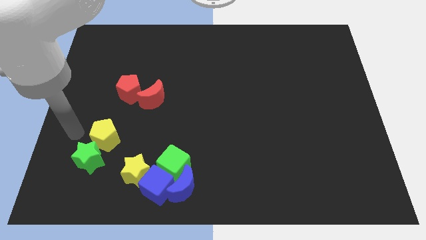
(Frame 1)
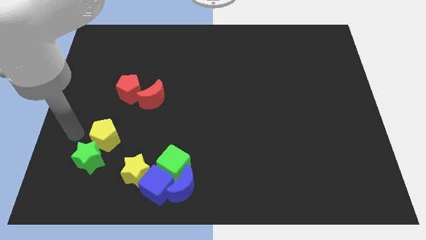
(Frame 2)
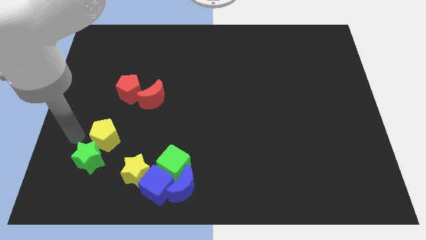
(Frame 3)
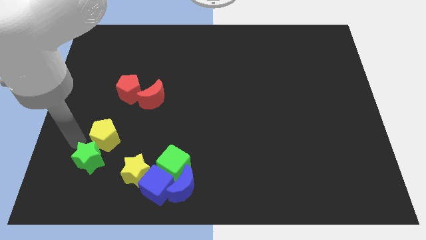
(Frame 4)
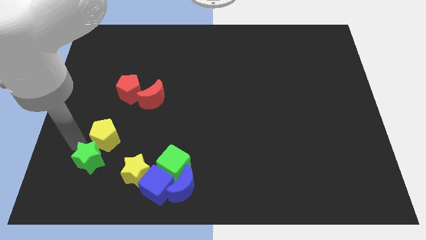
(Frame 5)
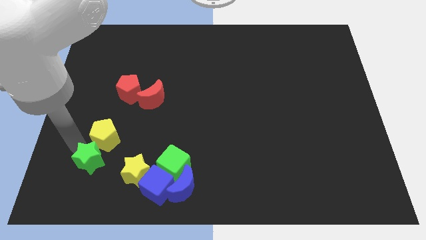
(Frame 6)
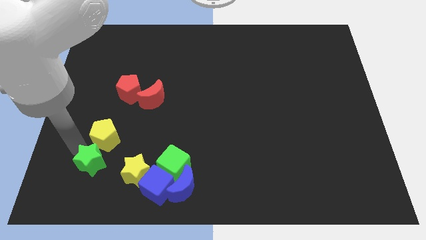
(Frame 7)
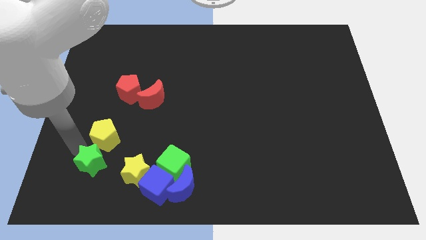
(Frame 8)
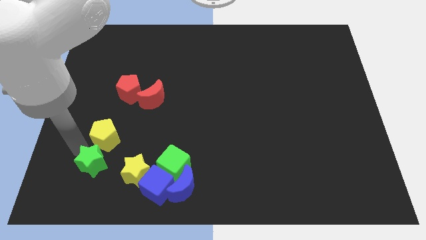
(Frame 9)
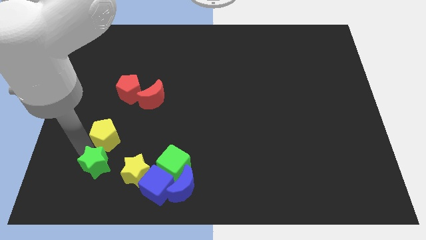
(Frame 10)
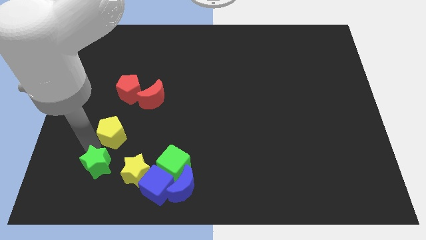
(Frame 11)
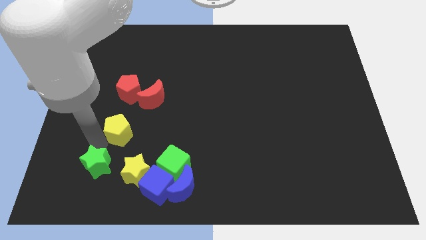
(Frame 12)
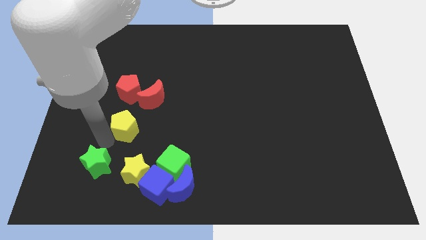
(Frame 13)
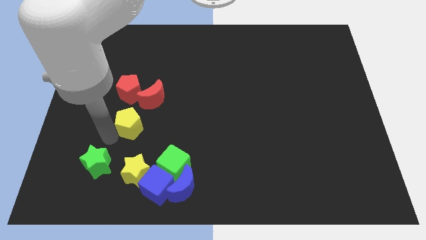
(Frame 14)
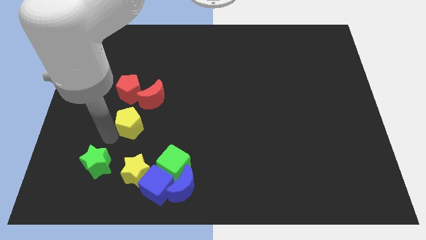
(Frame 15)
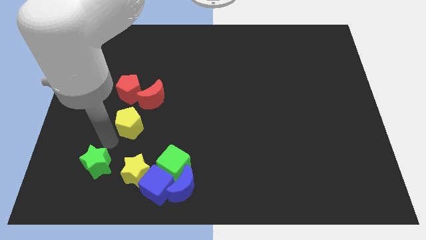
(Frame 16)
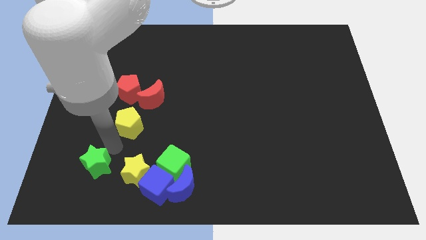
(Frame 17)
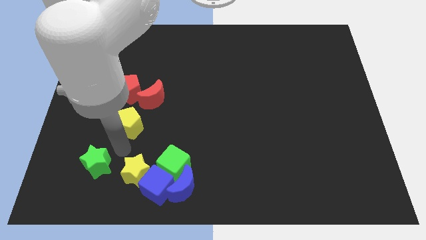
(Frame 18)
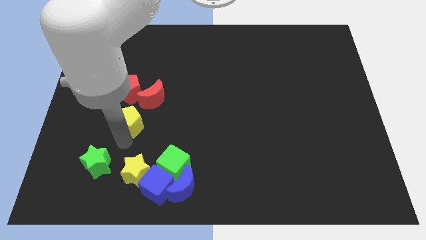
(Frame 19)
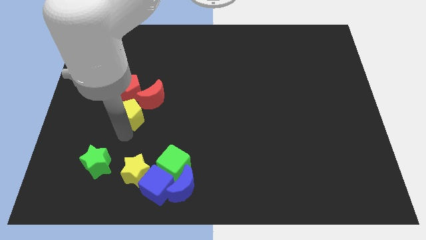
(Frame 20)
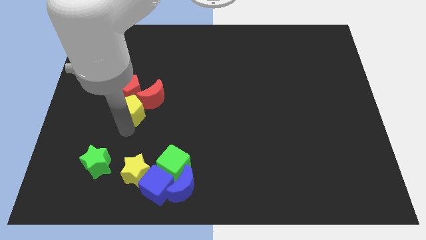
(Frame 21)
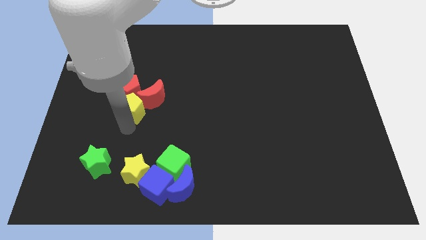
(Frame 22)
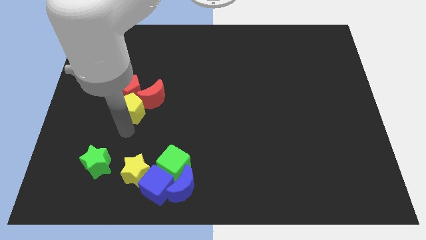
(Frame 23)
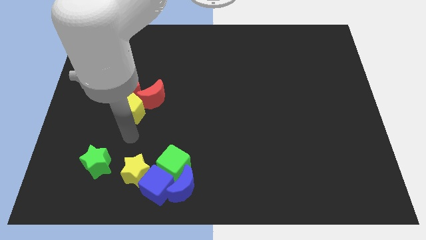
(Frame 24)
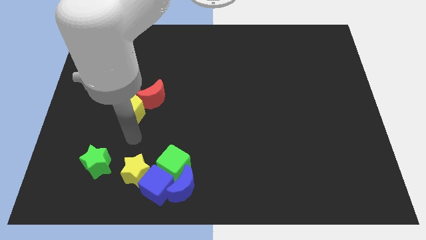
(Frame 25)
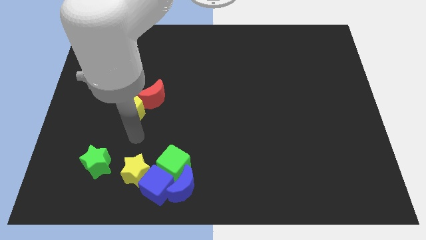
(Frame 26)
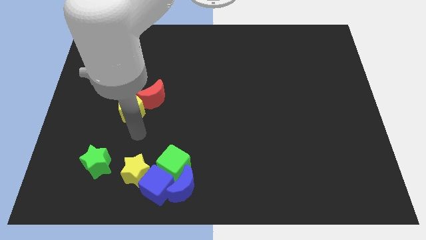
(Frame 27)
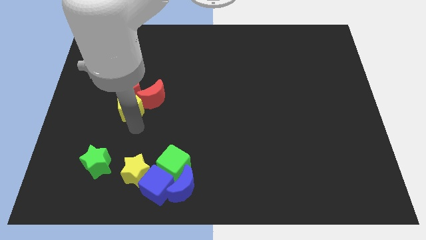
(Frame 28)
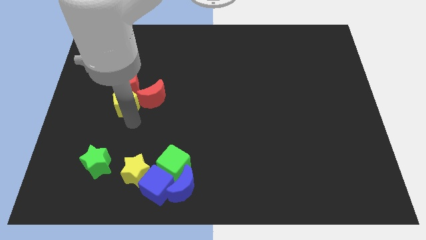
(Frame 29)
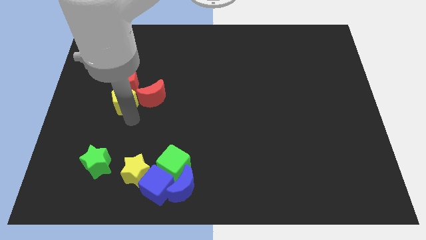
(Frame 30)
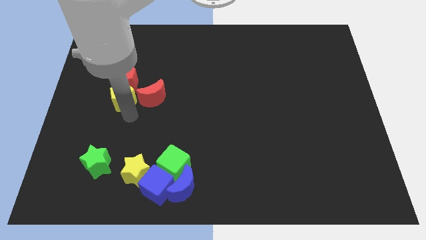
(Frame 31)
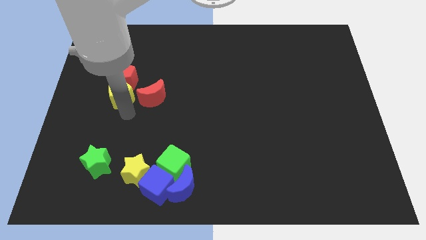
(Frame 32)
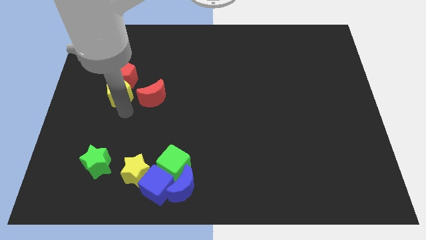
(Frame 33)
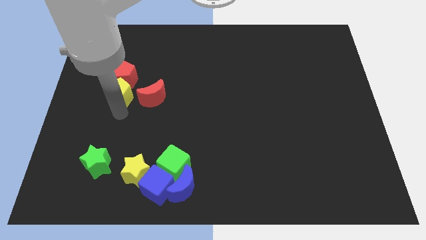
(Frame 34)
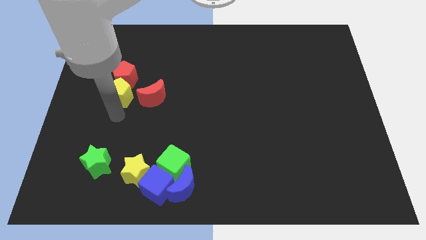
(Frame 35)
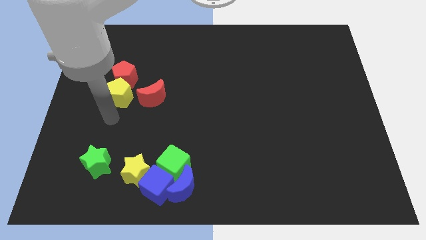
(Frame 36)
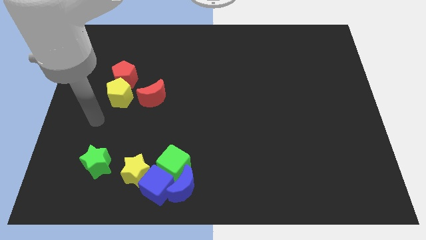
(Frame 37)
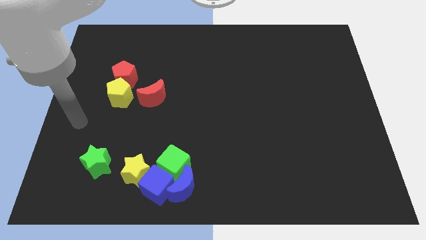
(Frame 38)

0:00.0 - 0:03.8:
move the yellow pentagon to the bottom side of the red pentagon

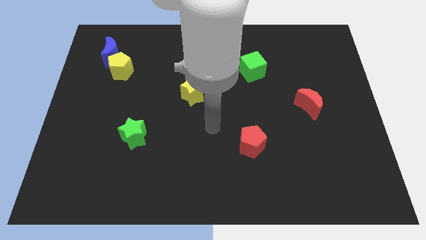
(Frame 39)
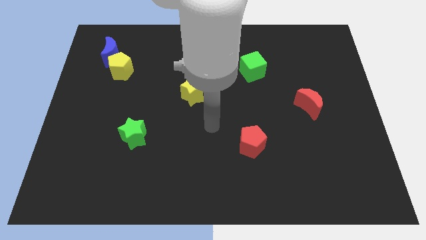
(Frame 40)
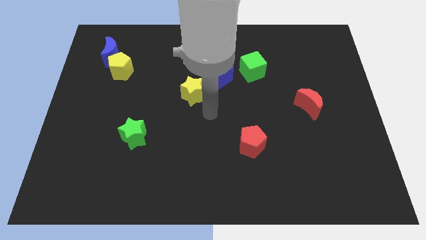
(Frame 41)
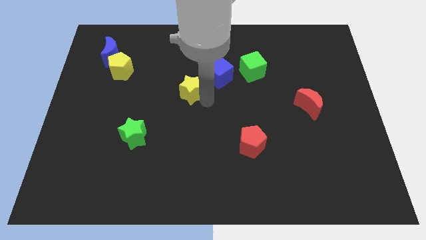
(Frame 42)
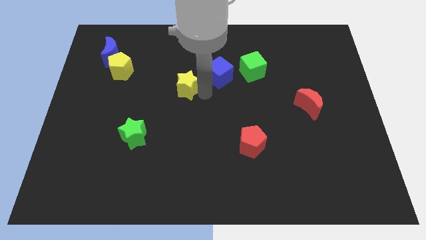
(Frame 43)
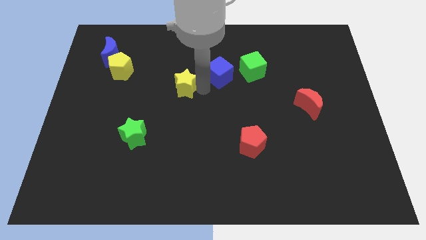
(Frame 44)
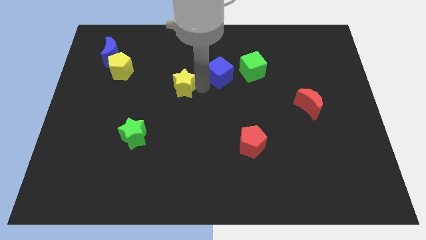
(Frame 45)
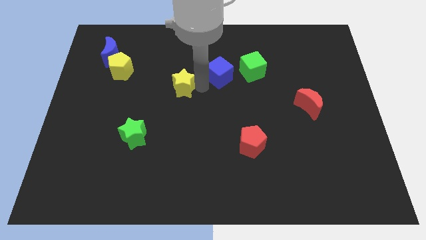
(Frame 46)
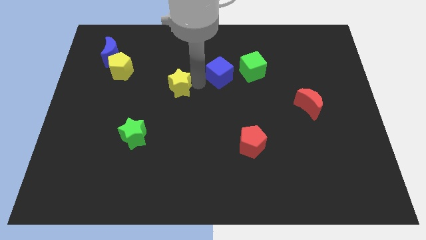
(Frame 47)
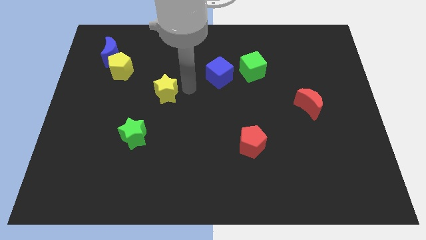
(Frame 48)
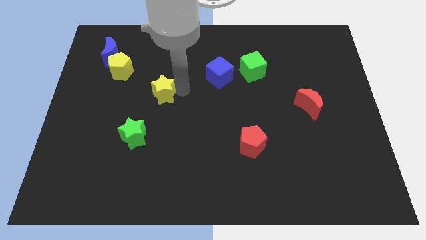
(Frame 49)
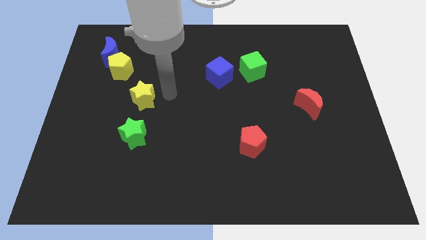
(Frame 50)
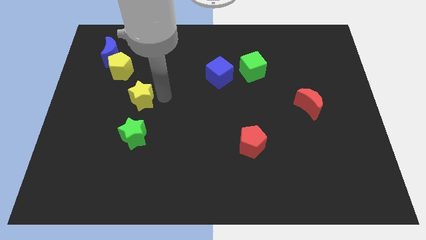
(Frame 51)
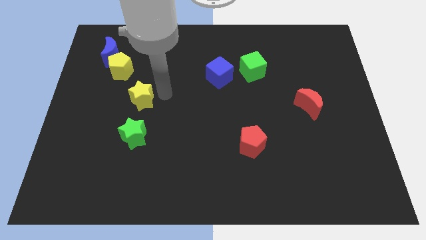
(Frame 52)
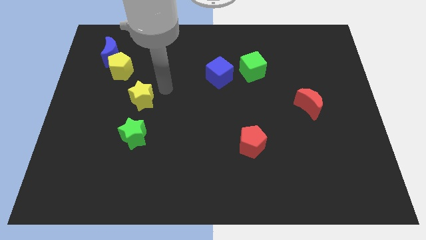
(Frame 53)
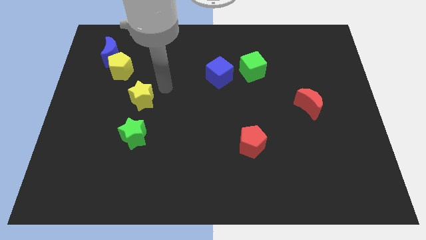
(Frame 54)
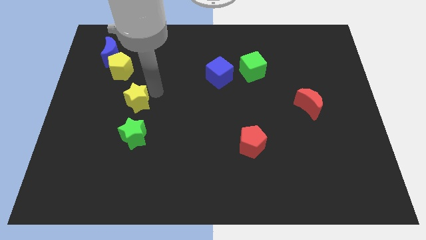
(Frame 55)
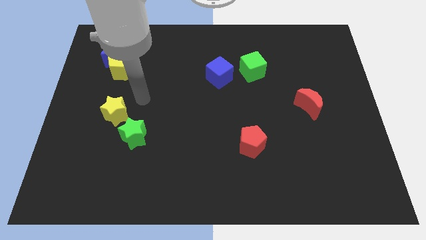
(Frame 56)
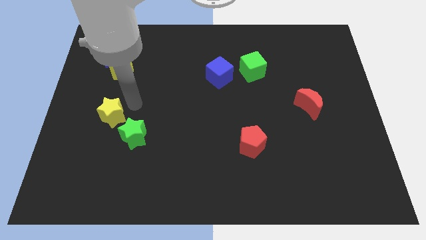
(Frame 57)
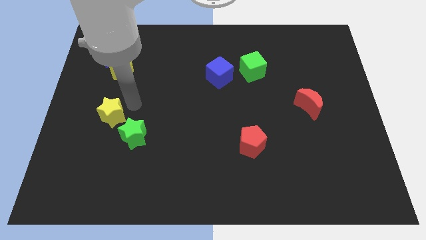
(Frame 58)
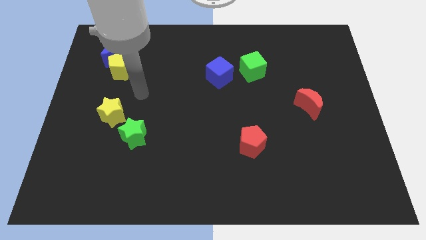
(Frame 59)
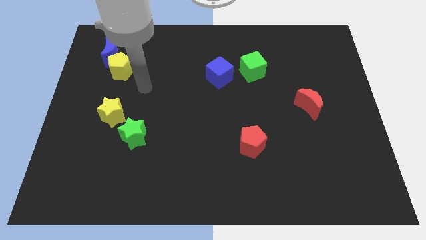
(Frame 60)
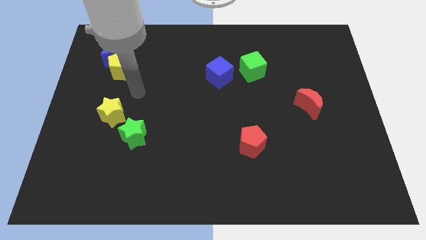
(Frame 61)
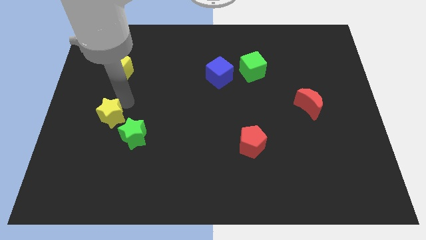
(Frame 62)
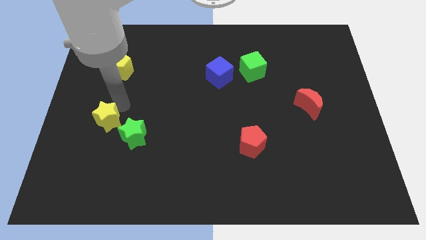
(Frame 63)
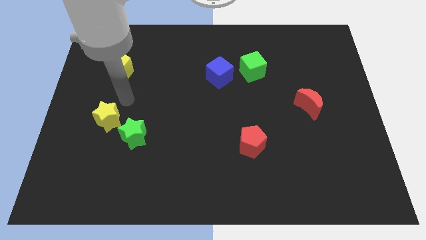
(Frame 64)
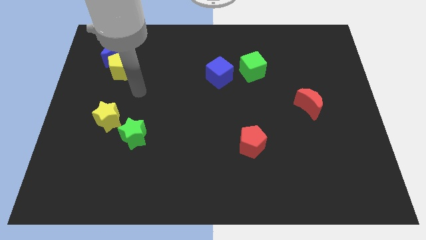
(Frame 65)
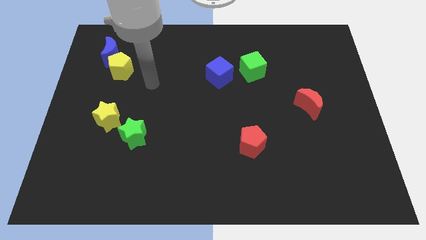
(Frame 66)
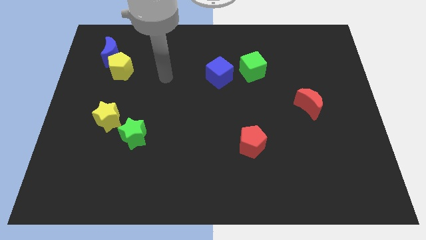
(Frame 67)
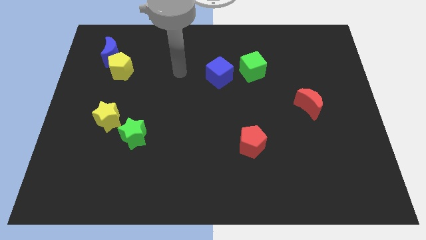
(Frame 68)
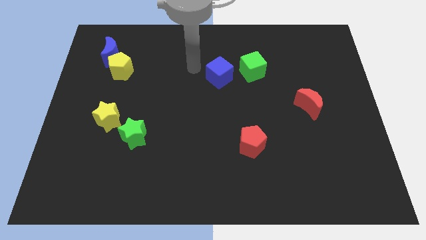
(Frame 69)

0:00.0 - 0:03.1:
push the yellow star to the top left of the green star

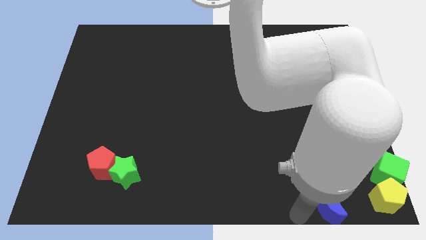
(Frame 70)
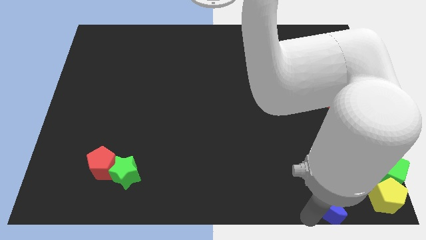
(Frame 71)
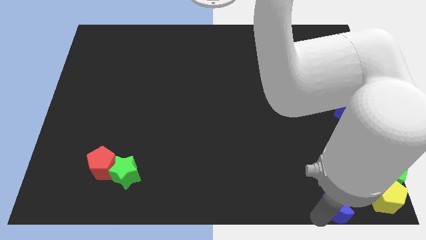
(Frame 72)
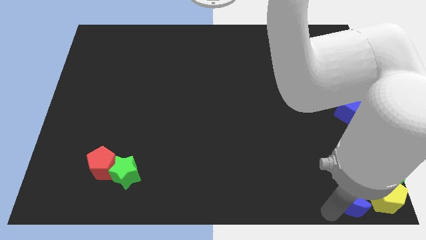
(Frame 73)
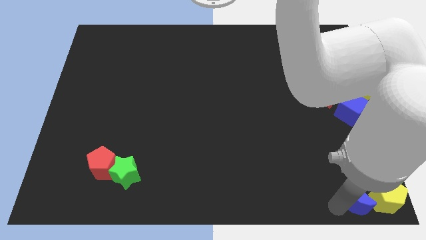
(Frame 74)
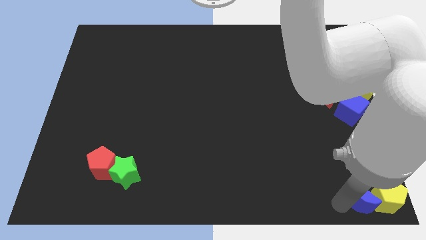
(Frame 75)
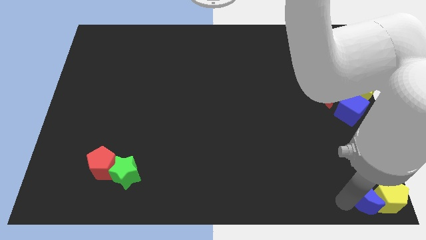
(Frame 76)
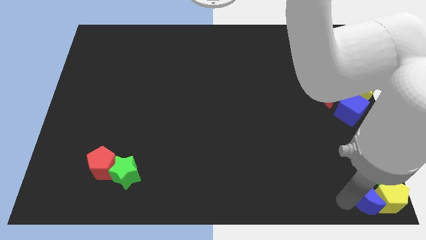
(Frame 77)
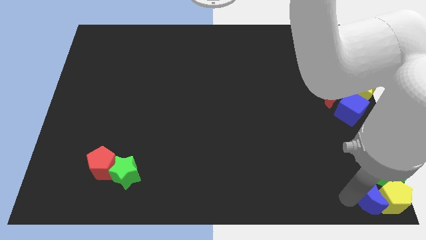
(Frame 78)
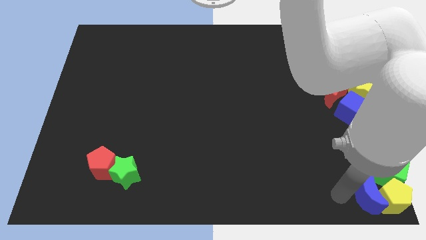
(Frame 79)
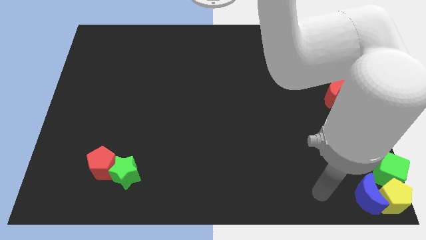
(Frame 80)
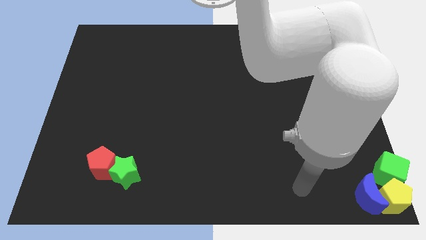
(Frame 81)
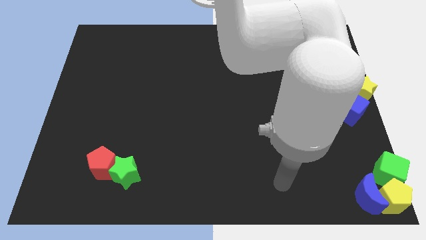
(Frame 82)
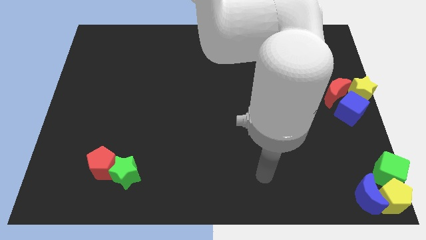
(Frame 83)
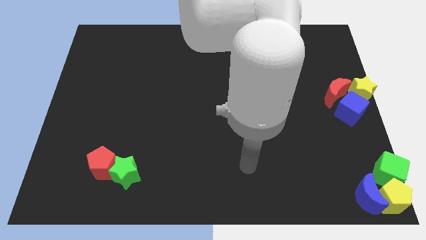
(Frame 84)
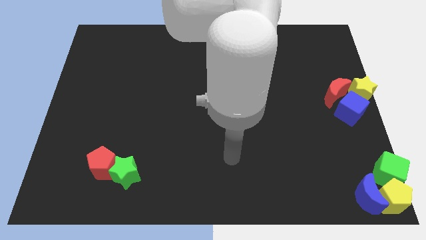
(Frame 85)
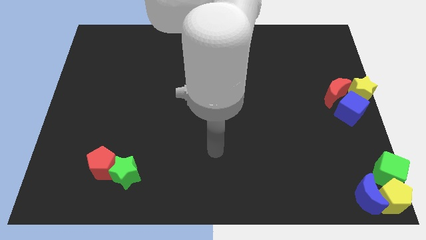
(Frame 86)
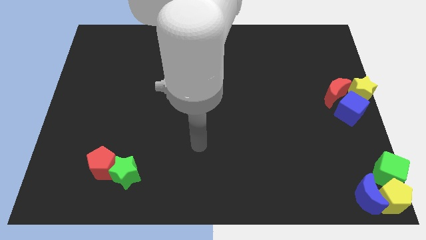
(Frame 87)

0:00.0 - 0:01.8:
slide the blue moon into the yellow pentagon

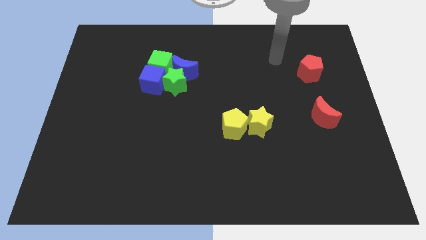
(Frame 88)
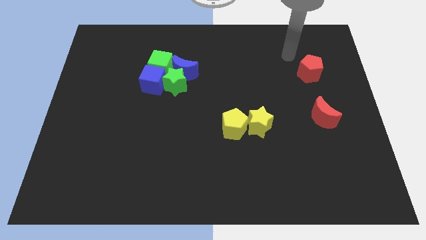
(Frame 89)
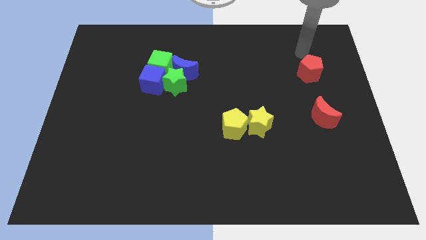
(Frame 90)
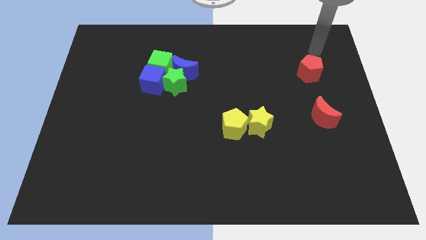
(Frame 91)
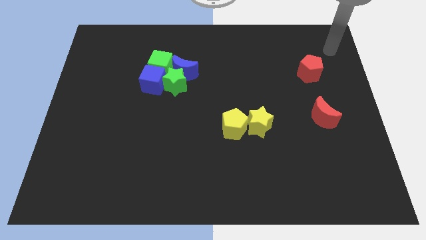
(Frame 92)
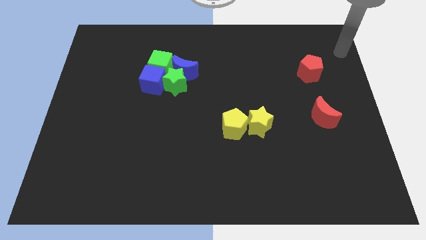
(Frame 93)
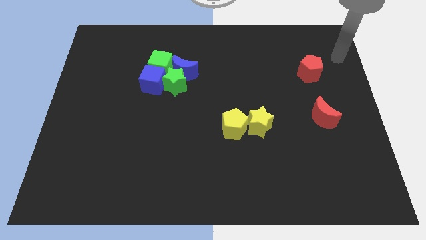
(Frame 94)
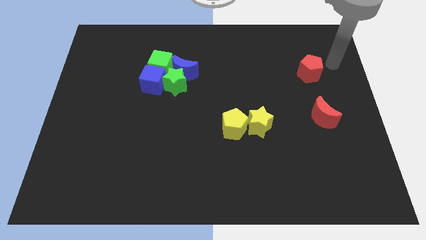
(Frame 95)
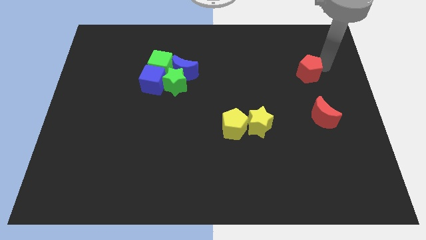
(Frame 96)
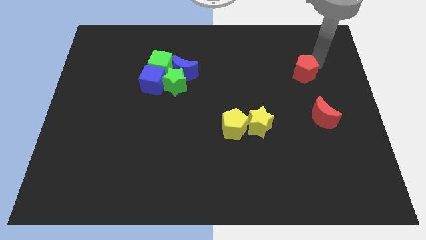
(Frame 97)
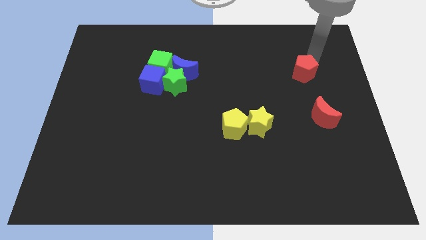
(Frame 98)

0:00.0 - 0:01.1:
move red pentagon slightly to the left vertical to red moon
